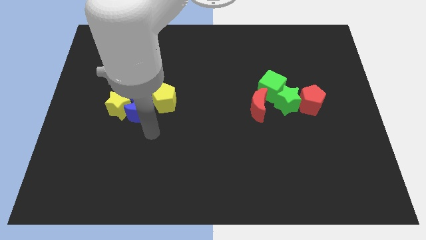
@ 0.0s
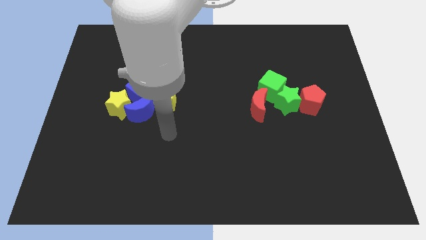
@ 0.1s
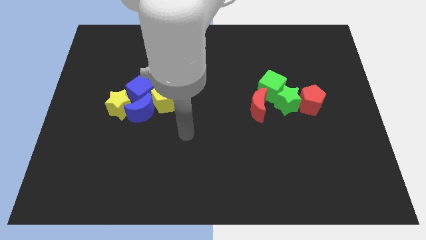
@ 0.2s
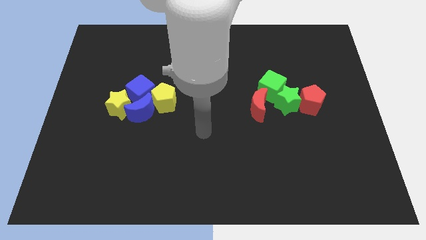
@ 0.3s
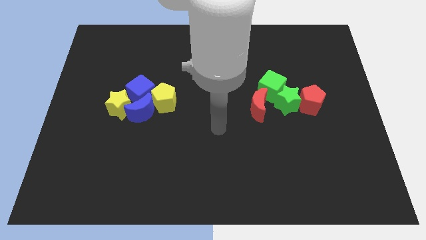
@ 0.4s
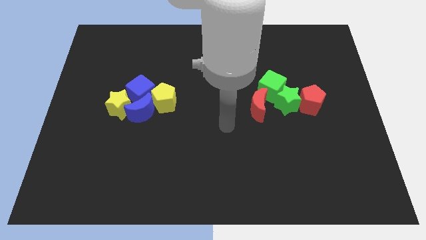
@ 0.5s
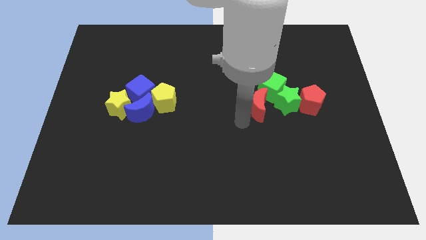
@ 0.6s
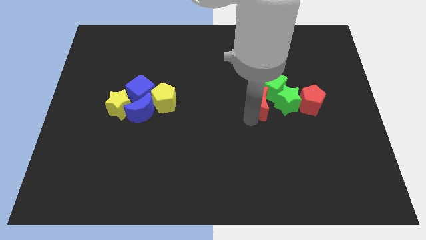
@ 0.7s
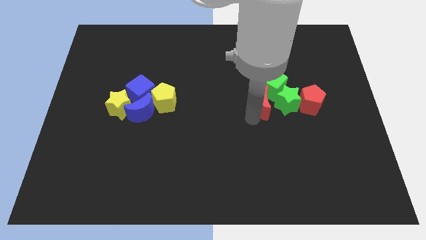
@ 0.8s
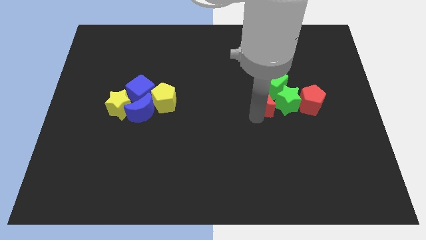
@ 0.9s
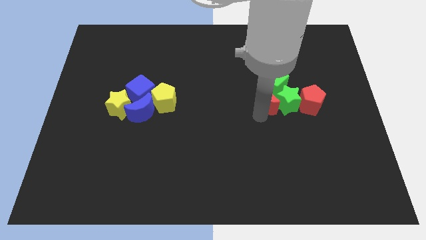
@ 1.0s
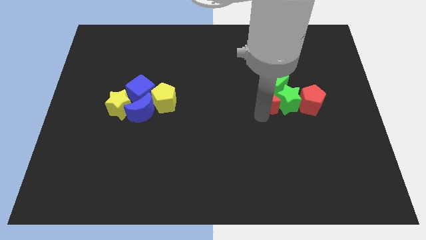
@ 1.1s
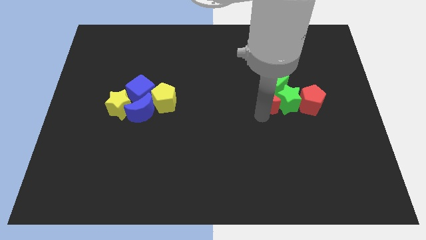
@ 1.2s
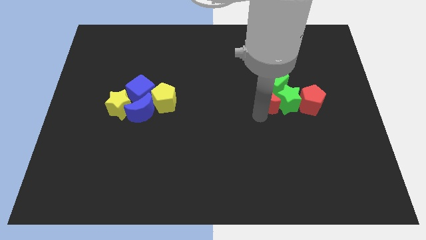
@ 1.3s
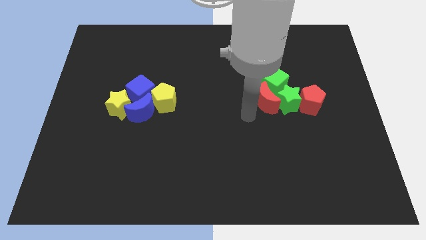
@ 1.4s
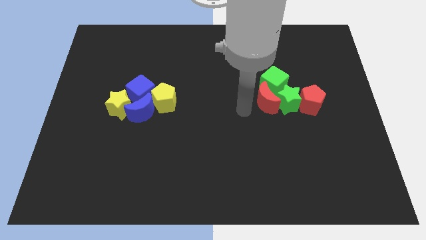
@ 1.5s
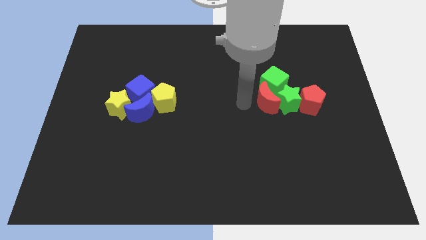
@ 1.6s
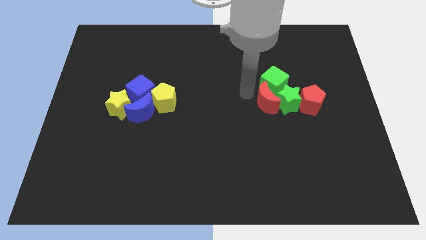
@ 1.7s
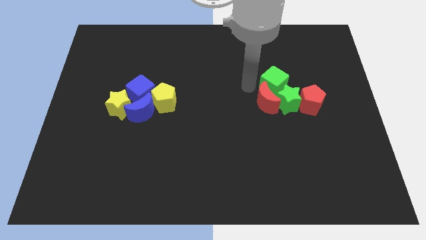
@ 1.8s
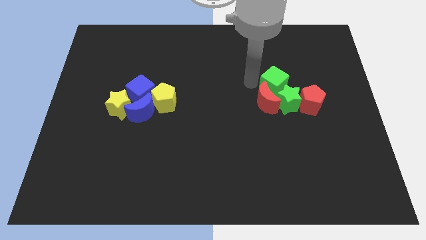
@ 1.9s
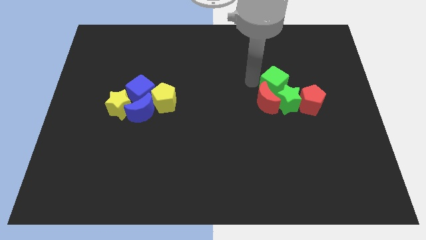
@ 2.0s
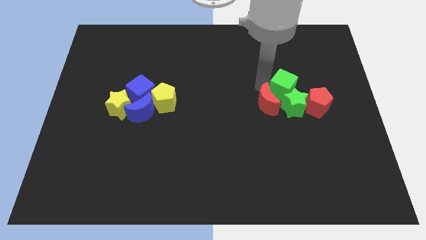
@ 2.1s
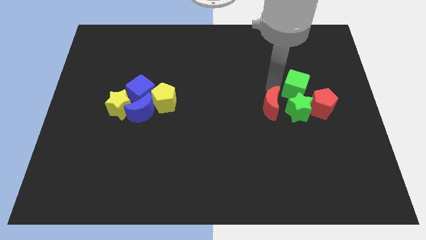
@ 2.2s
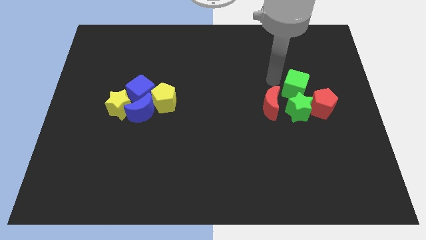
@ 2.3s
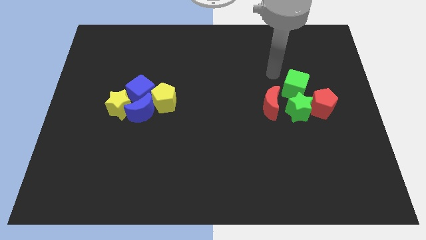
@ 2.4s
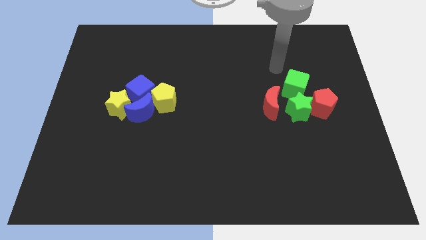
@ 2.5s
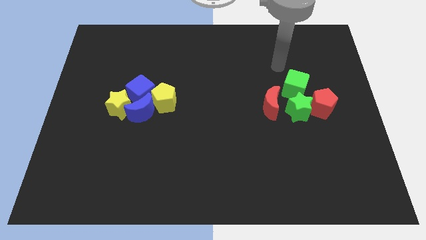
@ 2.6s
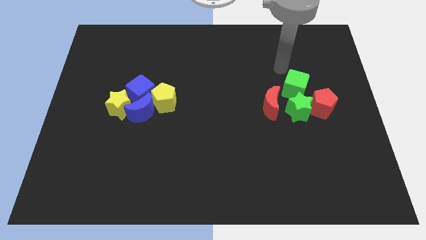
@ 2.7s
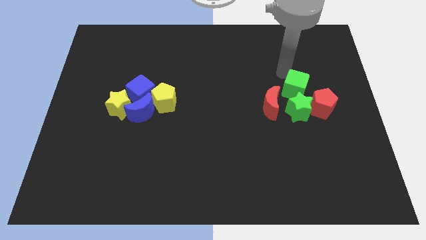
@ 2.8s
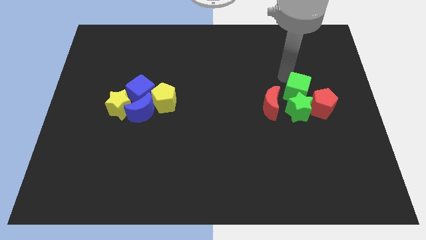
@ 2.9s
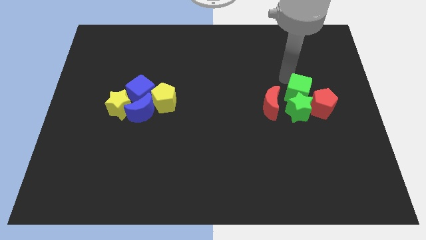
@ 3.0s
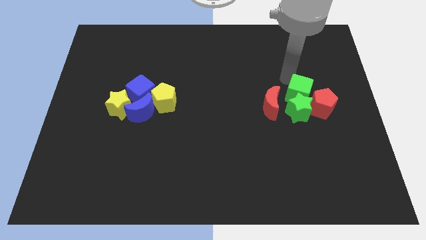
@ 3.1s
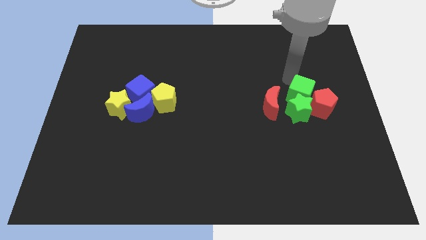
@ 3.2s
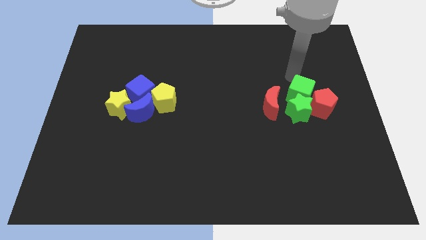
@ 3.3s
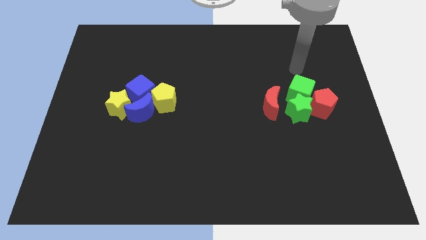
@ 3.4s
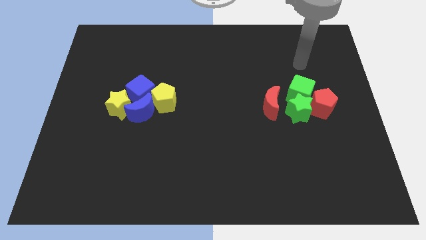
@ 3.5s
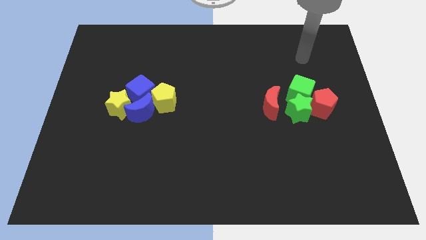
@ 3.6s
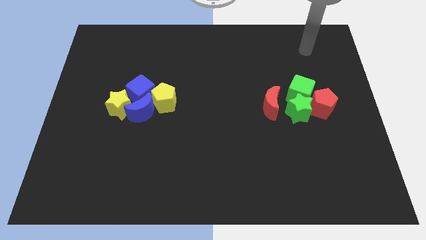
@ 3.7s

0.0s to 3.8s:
adjust the green blocks in between the red blocks

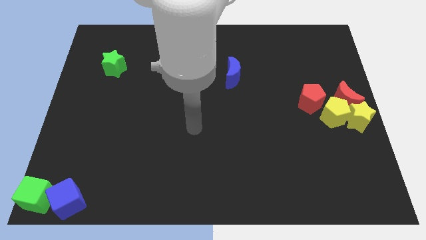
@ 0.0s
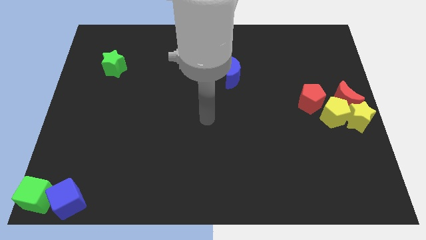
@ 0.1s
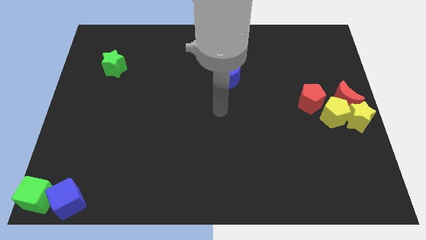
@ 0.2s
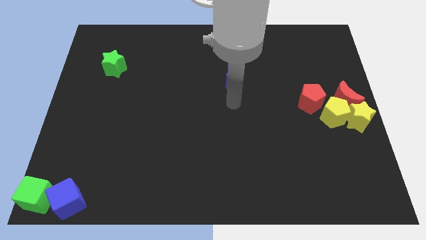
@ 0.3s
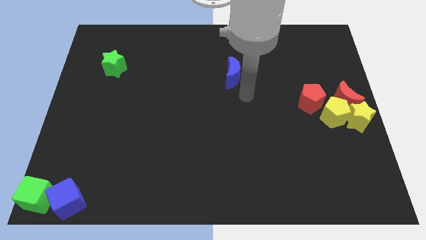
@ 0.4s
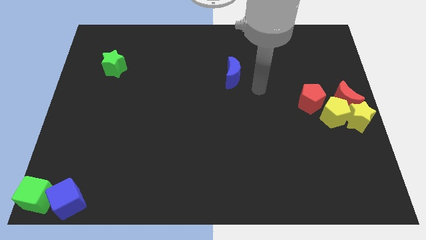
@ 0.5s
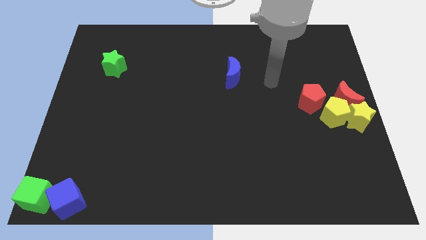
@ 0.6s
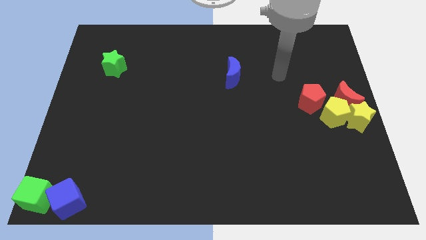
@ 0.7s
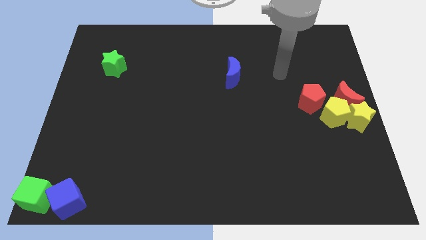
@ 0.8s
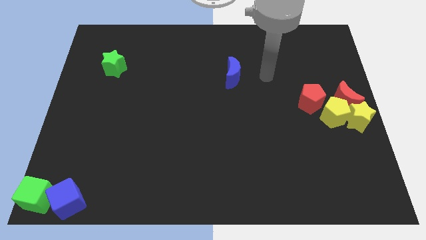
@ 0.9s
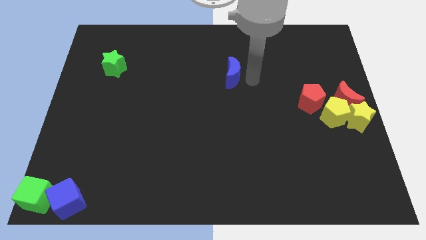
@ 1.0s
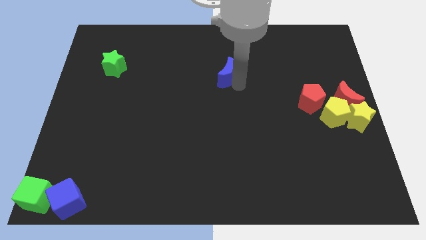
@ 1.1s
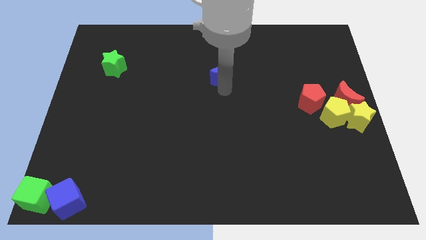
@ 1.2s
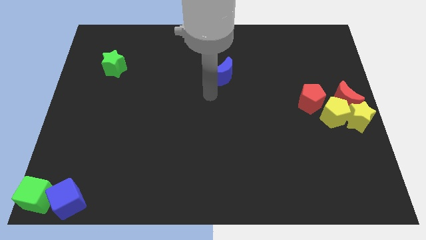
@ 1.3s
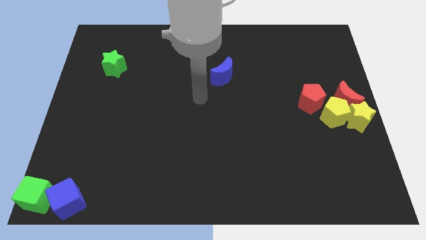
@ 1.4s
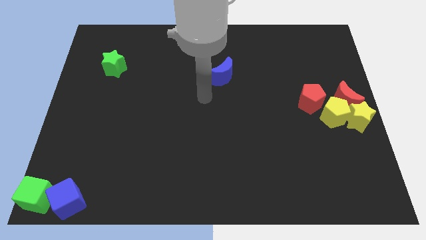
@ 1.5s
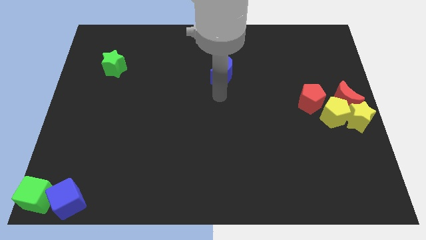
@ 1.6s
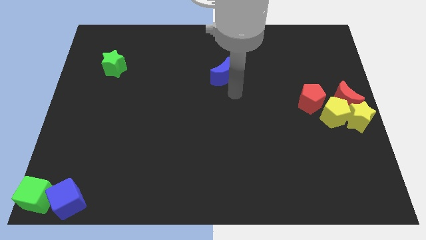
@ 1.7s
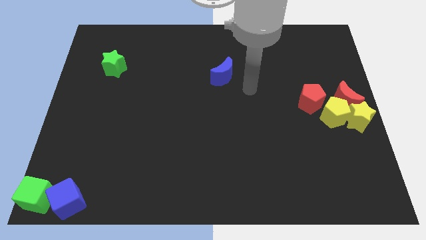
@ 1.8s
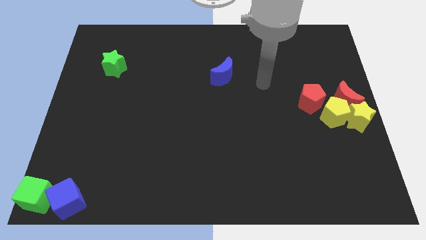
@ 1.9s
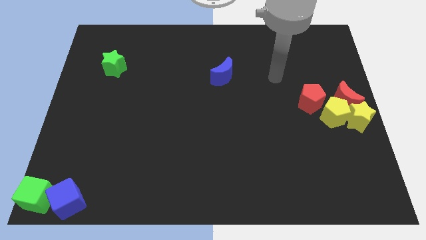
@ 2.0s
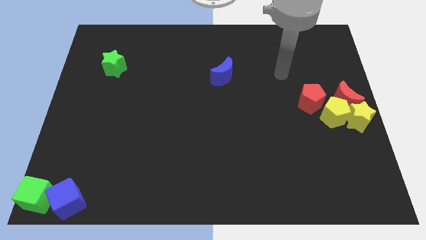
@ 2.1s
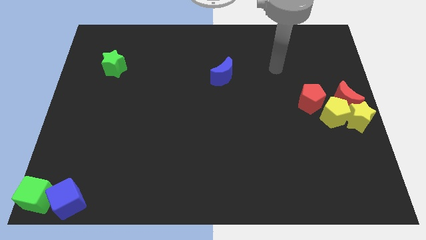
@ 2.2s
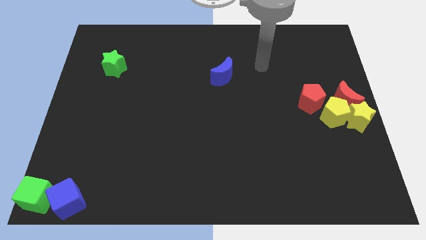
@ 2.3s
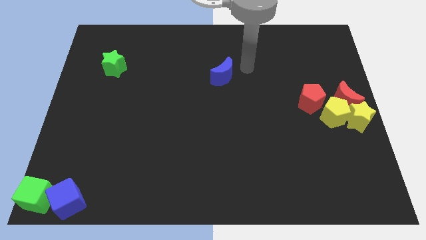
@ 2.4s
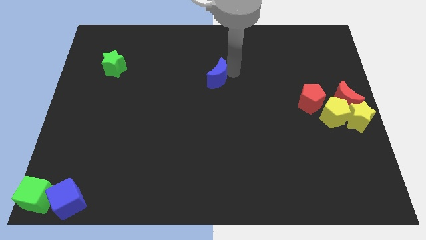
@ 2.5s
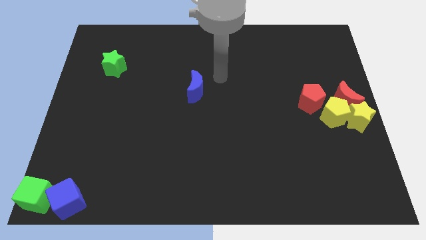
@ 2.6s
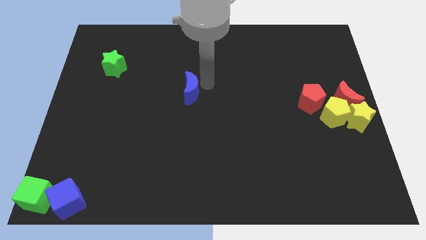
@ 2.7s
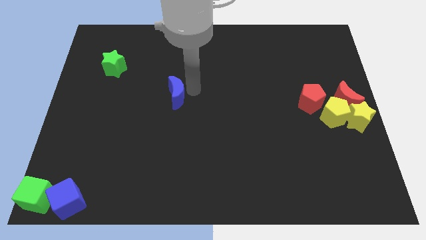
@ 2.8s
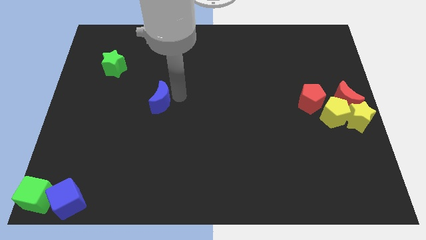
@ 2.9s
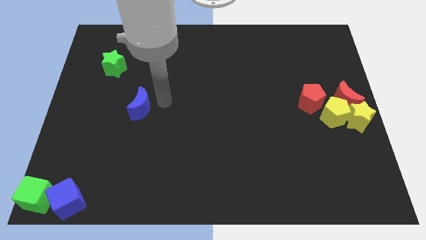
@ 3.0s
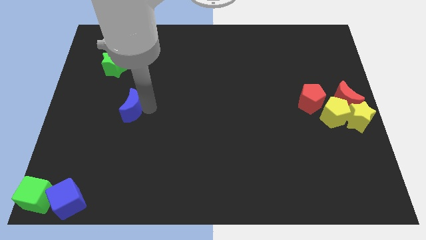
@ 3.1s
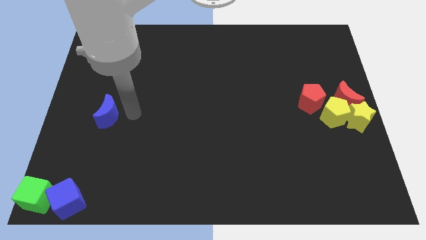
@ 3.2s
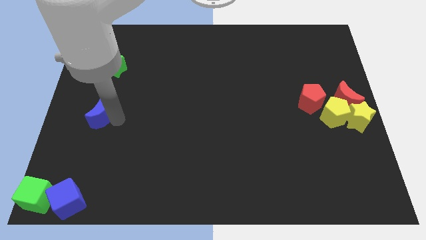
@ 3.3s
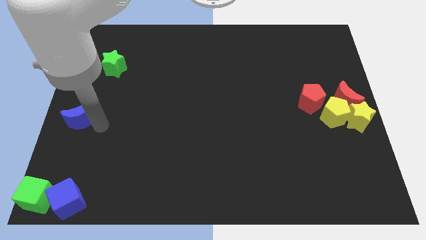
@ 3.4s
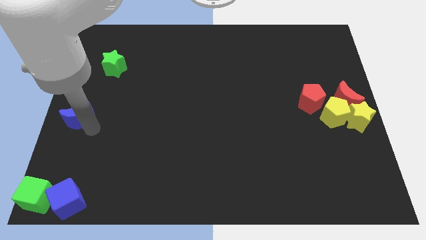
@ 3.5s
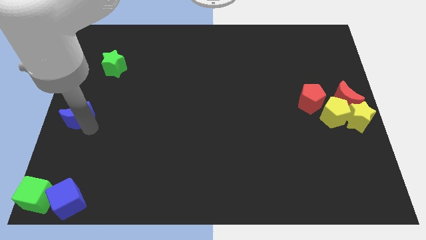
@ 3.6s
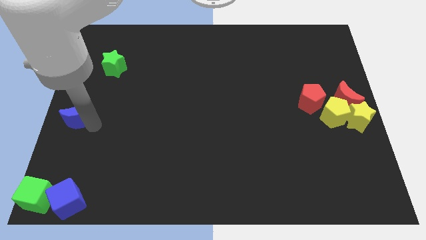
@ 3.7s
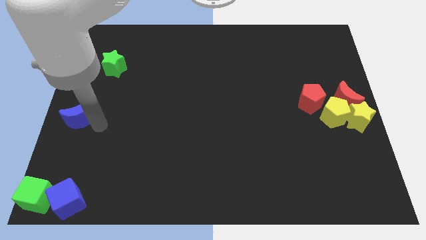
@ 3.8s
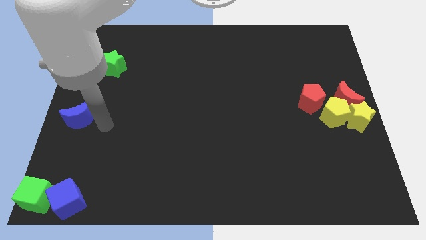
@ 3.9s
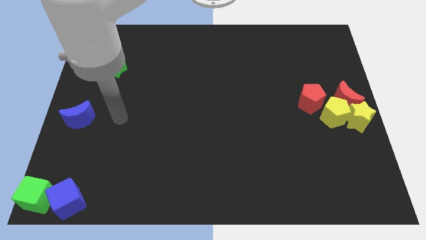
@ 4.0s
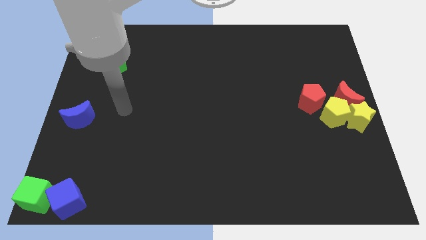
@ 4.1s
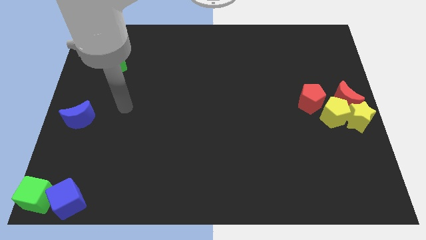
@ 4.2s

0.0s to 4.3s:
place the blue moon at the left center of the board

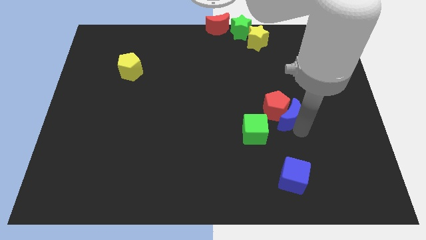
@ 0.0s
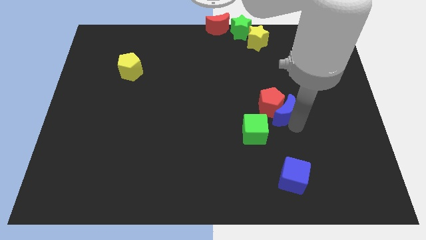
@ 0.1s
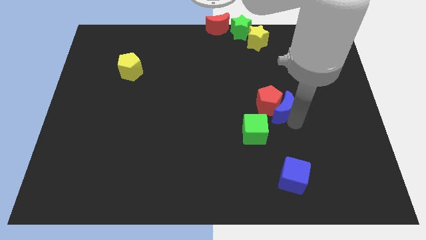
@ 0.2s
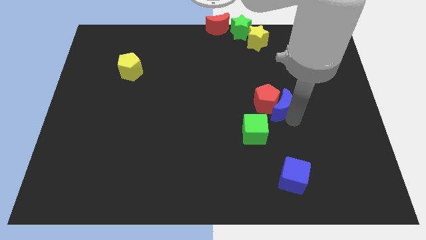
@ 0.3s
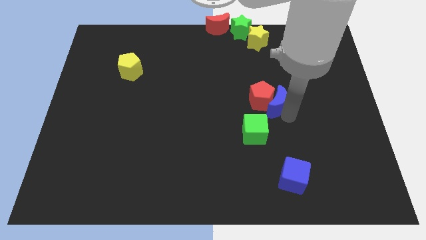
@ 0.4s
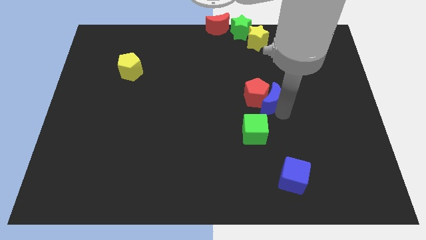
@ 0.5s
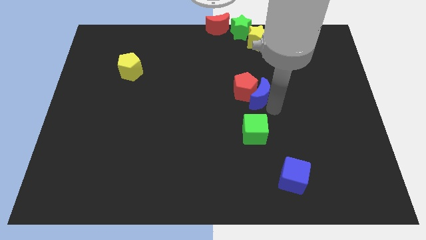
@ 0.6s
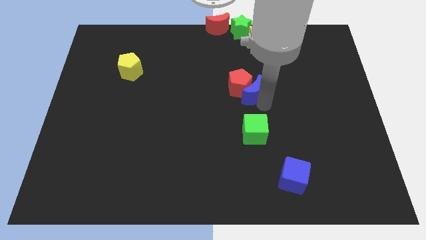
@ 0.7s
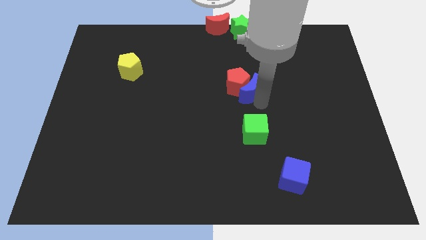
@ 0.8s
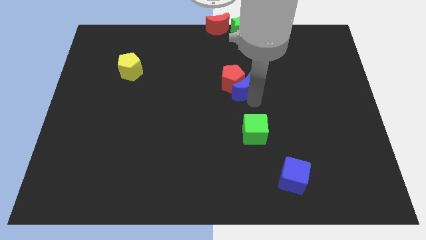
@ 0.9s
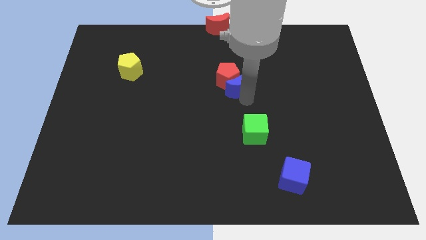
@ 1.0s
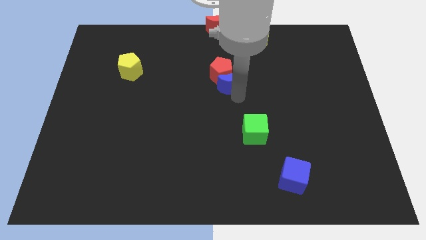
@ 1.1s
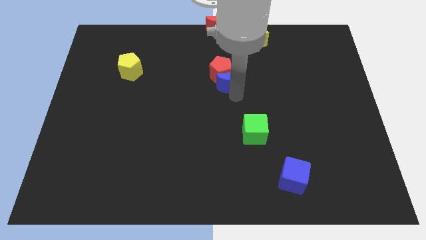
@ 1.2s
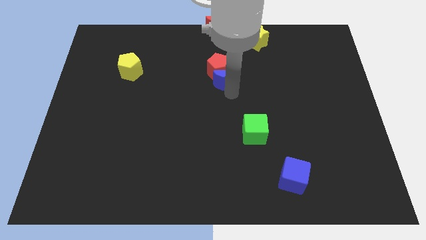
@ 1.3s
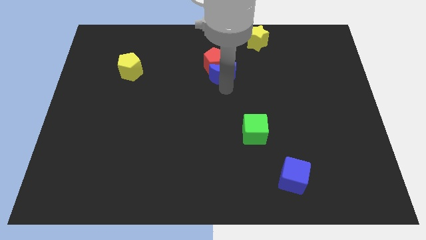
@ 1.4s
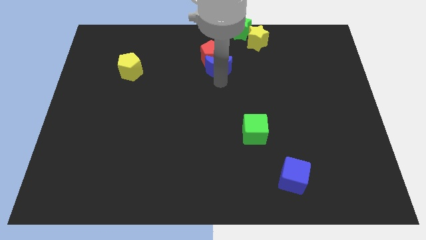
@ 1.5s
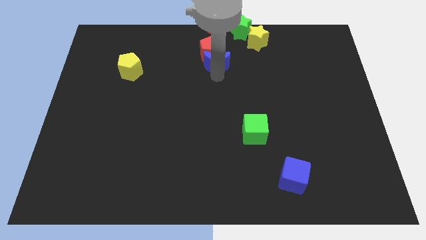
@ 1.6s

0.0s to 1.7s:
push the blue crescent and the red pentagon towards the top center
